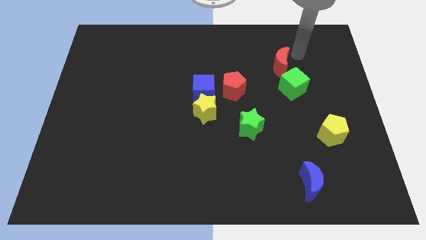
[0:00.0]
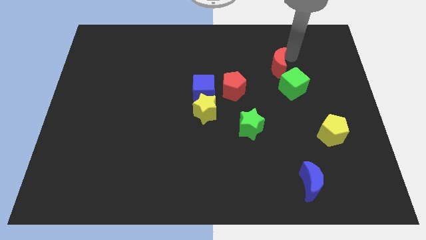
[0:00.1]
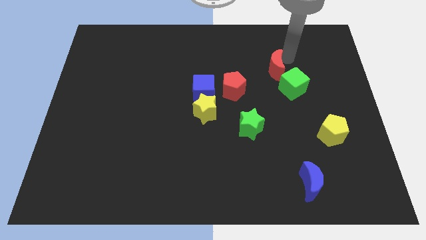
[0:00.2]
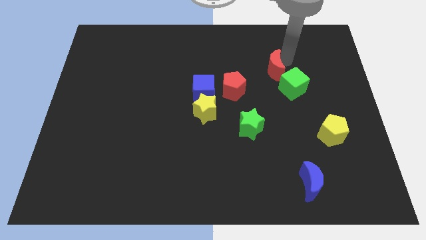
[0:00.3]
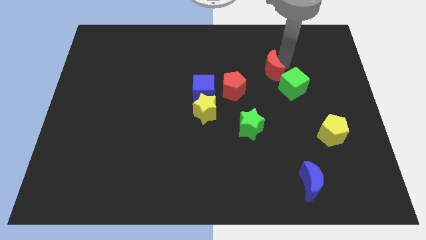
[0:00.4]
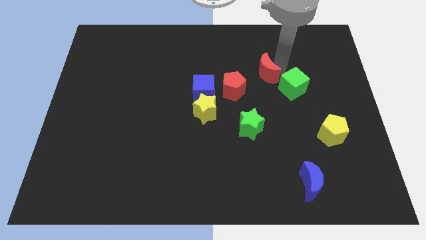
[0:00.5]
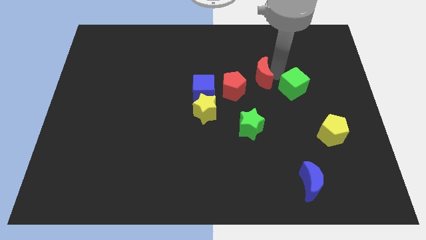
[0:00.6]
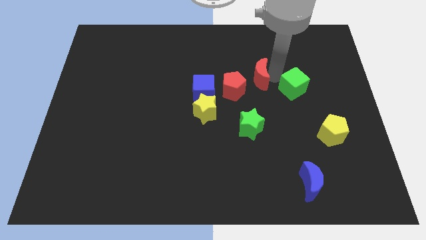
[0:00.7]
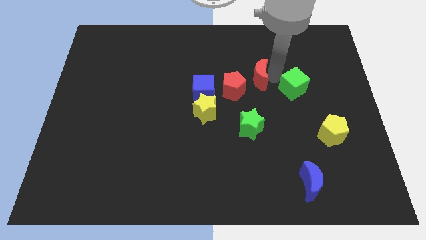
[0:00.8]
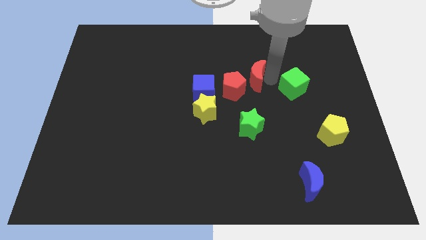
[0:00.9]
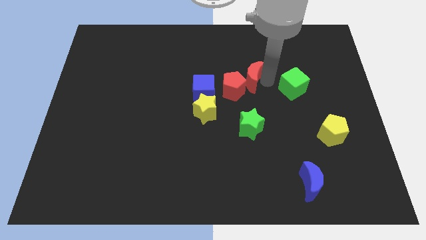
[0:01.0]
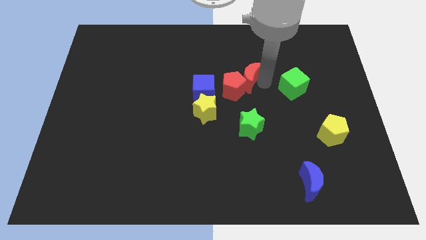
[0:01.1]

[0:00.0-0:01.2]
move the red crescent to the right of the red pentagon

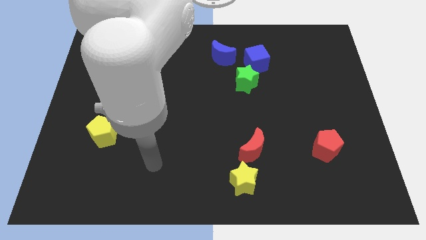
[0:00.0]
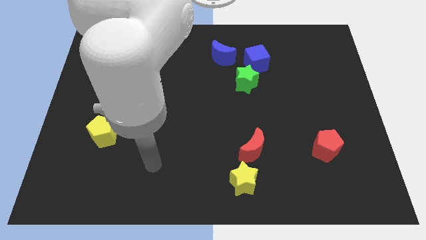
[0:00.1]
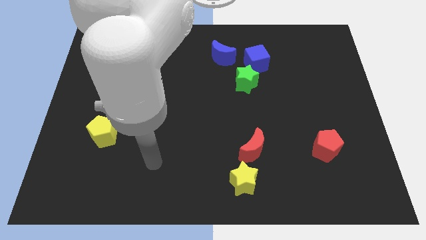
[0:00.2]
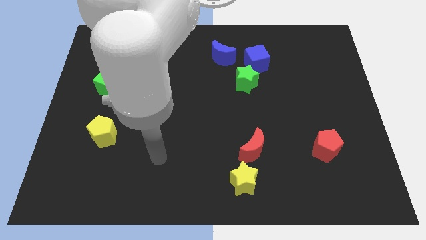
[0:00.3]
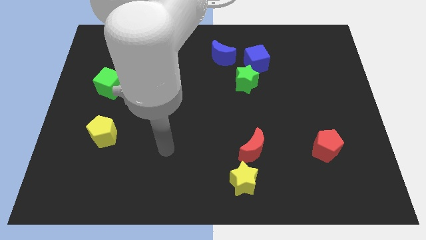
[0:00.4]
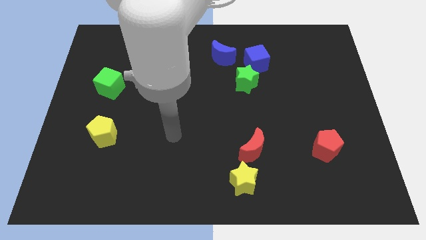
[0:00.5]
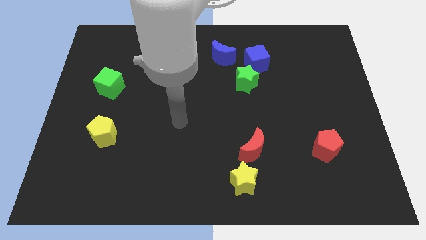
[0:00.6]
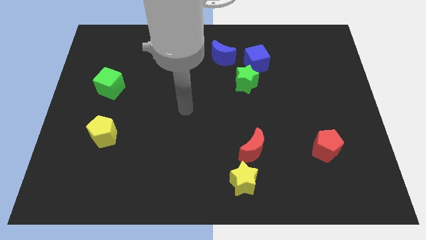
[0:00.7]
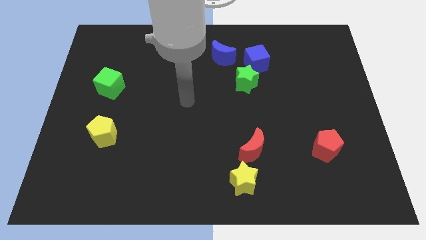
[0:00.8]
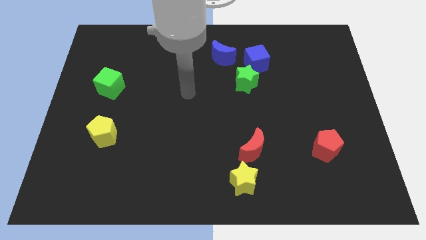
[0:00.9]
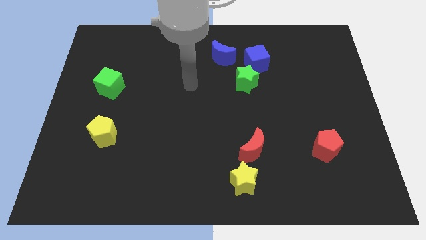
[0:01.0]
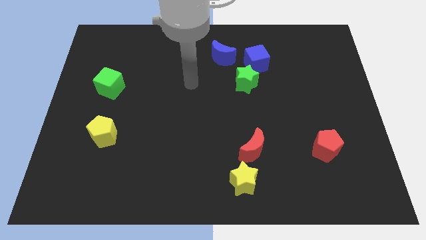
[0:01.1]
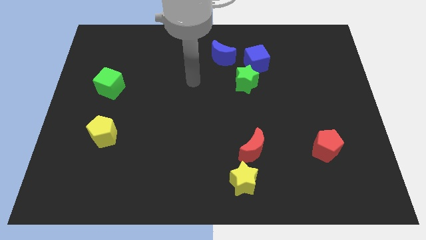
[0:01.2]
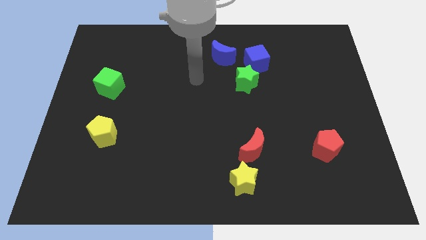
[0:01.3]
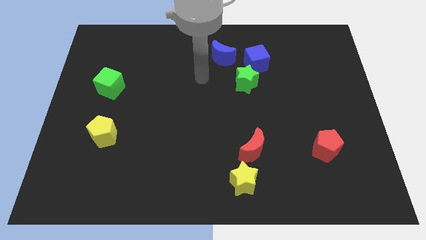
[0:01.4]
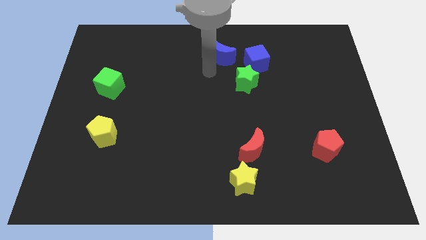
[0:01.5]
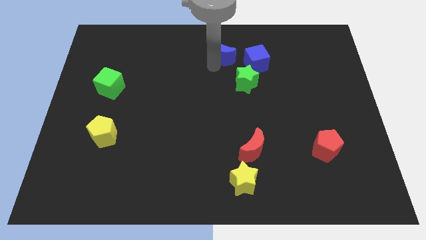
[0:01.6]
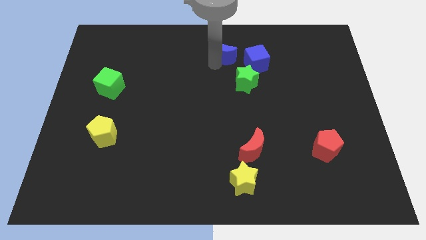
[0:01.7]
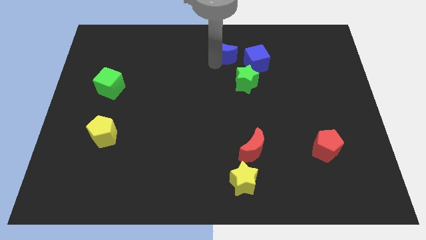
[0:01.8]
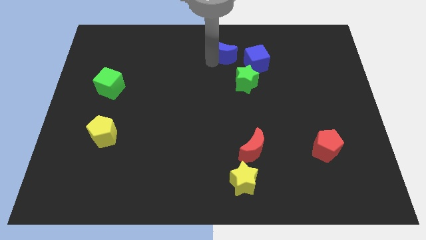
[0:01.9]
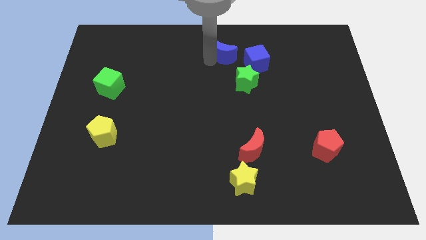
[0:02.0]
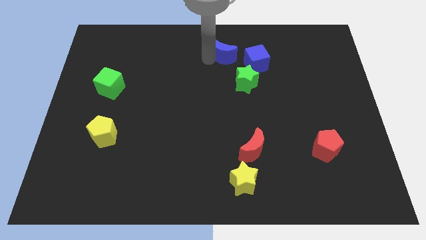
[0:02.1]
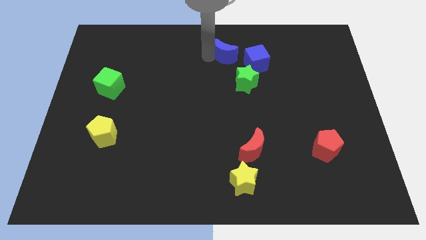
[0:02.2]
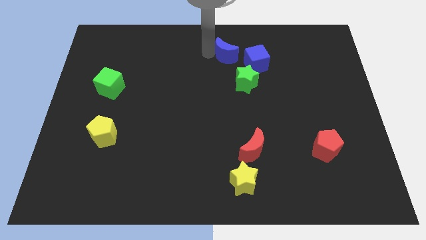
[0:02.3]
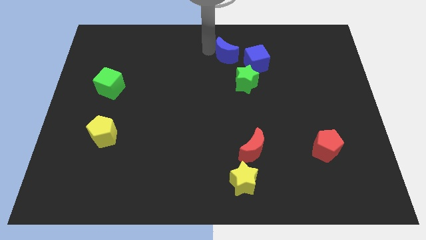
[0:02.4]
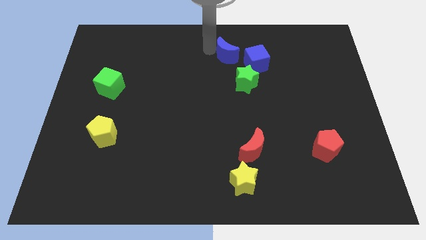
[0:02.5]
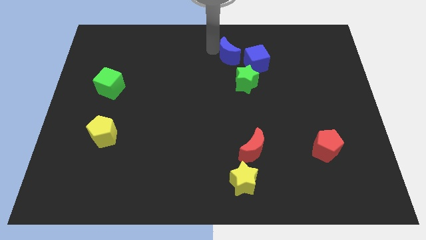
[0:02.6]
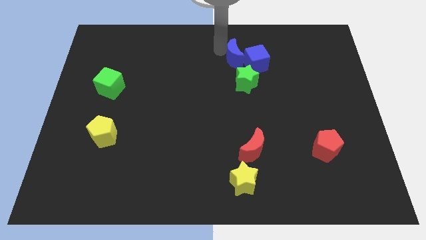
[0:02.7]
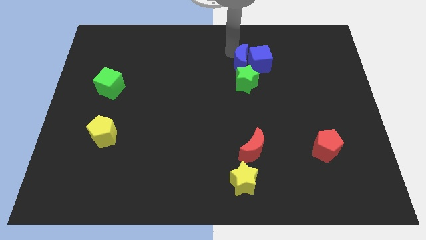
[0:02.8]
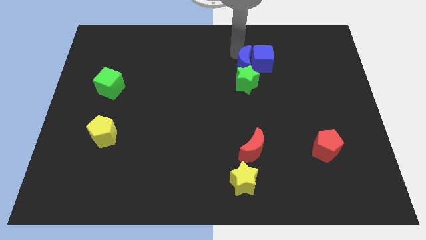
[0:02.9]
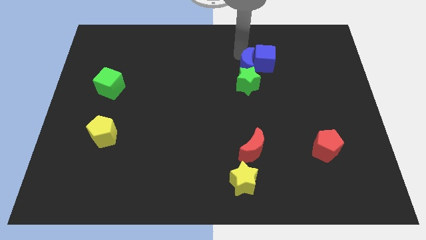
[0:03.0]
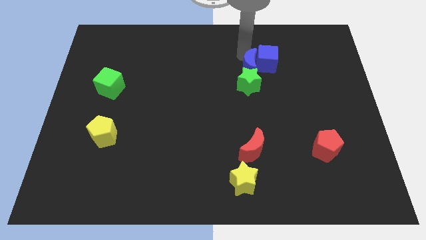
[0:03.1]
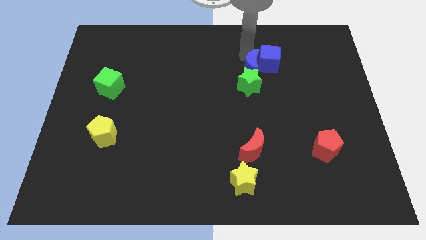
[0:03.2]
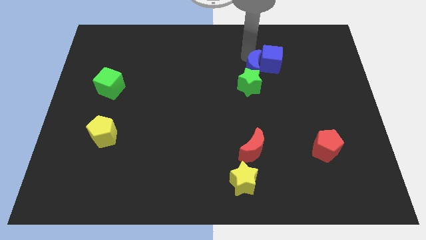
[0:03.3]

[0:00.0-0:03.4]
move your arm close to the blue moon

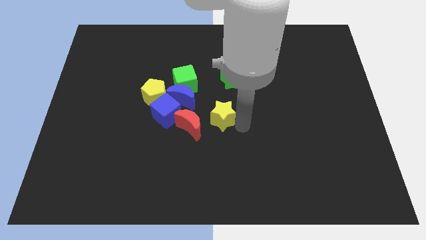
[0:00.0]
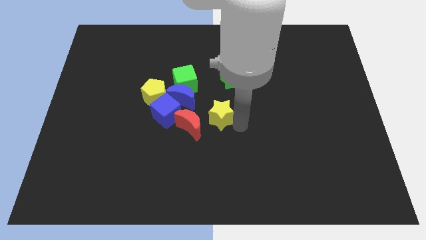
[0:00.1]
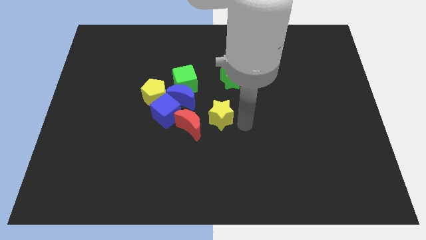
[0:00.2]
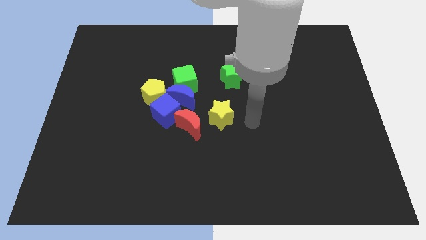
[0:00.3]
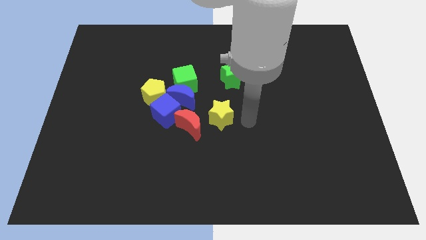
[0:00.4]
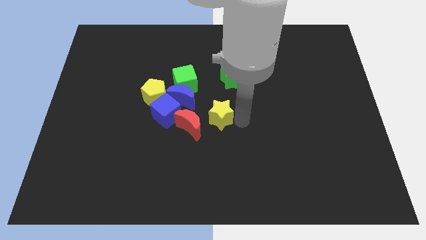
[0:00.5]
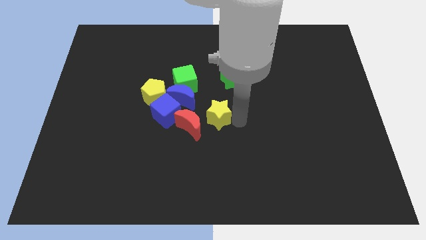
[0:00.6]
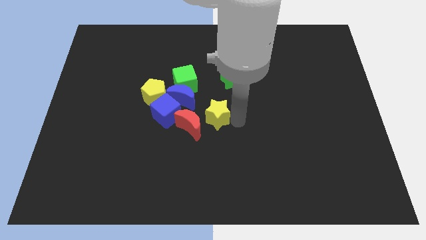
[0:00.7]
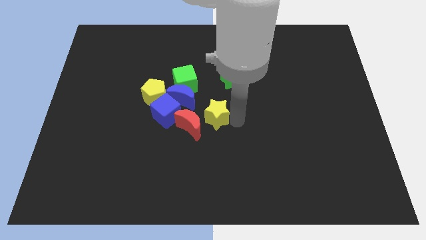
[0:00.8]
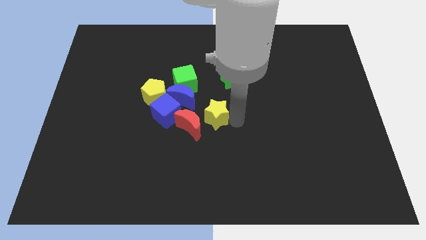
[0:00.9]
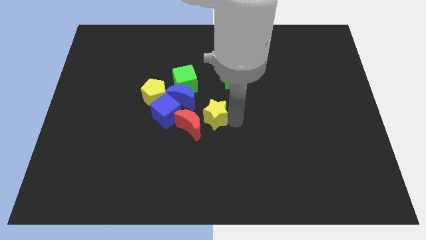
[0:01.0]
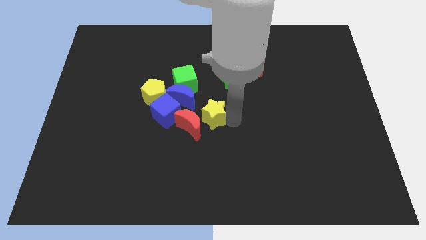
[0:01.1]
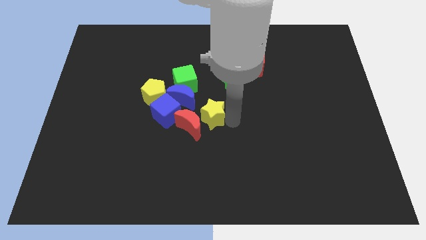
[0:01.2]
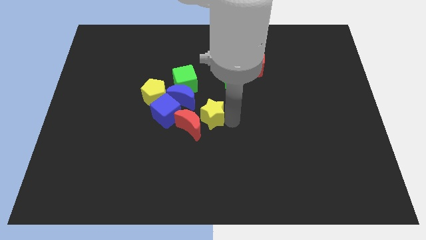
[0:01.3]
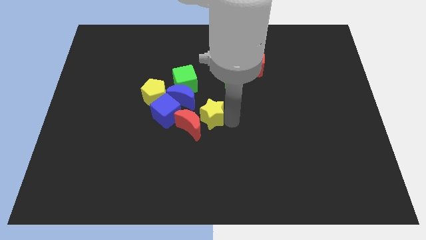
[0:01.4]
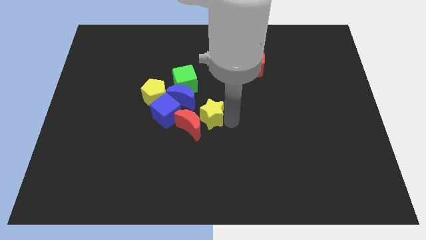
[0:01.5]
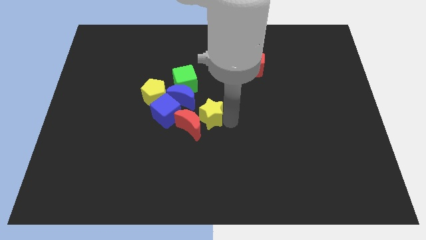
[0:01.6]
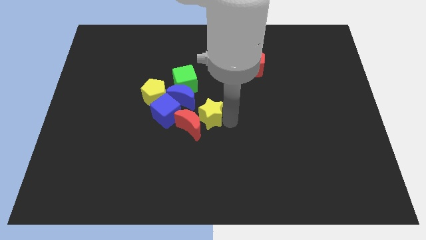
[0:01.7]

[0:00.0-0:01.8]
move the yellow star to the right side of the red moon

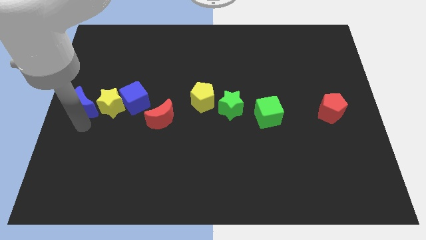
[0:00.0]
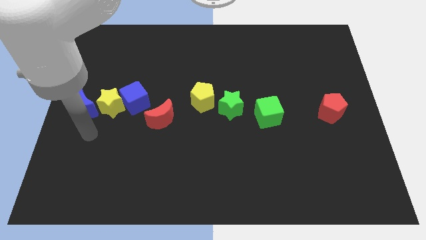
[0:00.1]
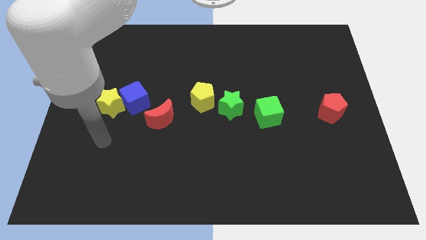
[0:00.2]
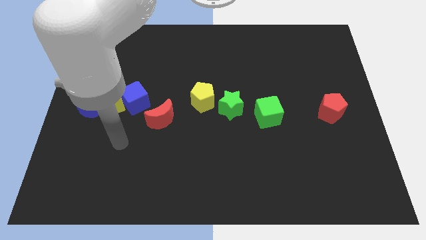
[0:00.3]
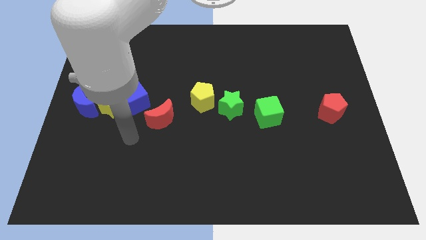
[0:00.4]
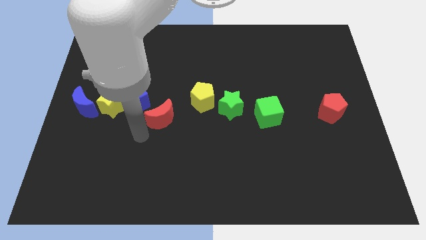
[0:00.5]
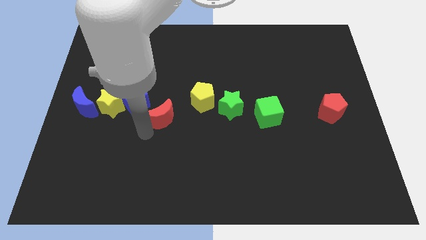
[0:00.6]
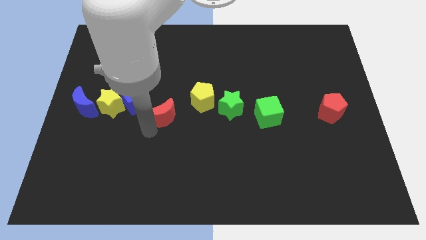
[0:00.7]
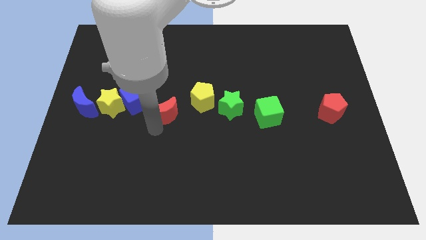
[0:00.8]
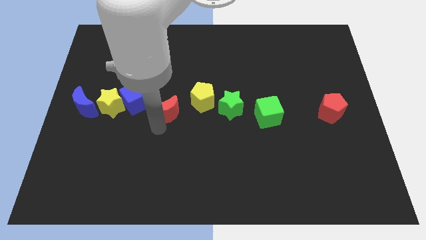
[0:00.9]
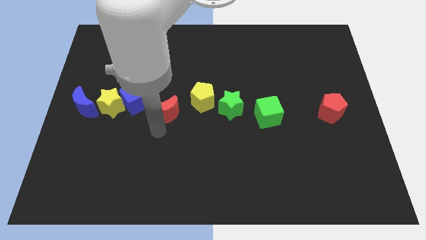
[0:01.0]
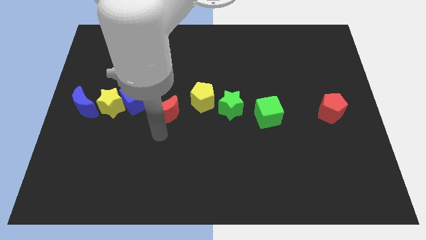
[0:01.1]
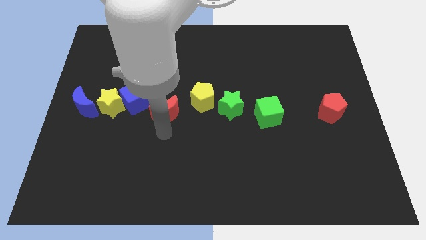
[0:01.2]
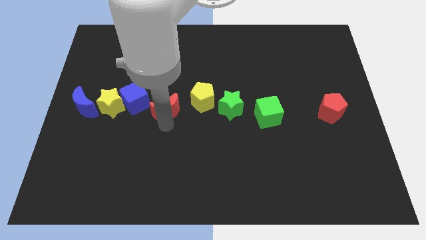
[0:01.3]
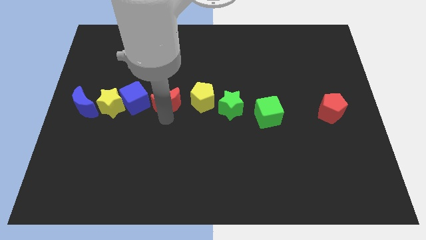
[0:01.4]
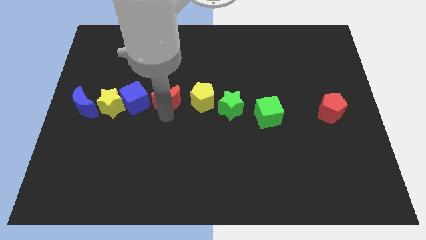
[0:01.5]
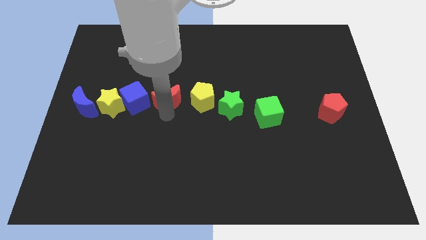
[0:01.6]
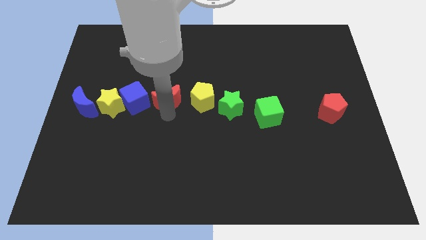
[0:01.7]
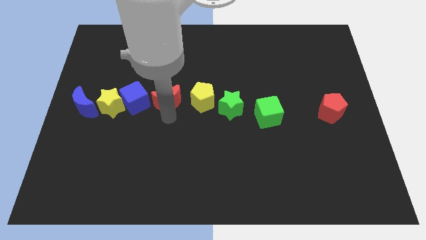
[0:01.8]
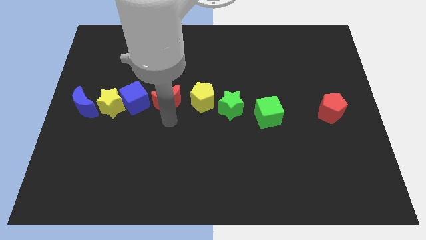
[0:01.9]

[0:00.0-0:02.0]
put the red moon right to the blue cube

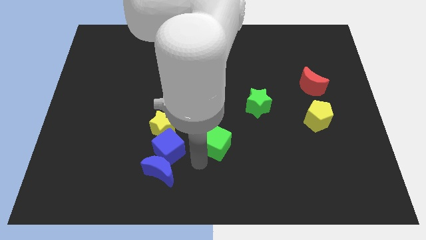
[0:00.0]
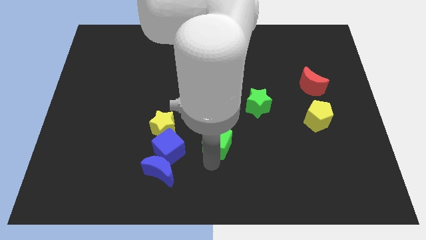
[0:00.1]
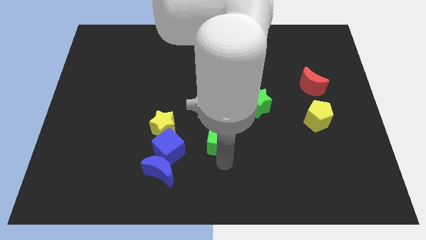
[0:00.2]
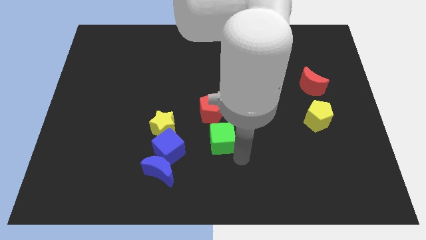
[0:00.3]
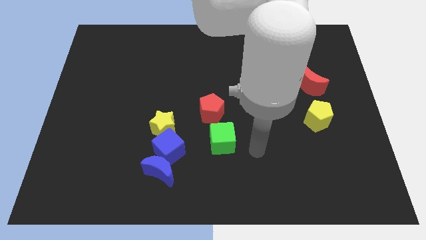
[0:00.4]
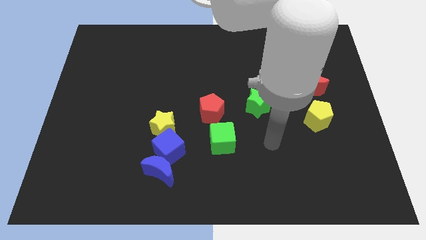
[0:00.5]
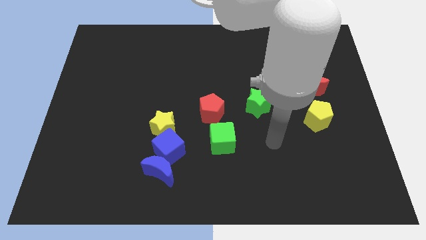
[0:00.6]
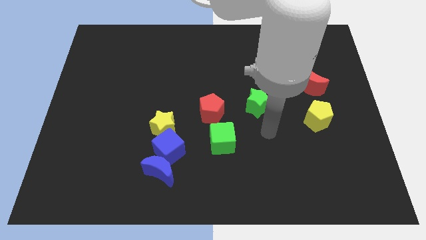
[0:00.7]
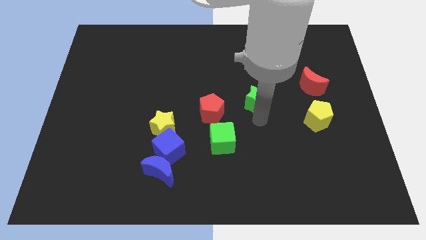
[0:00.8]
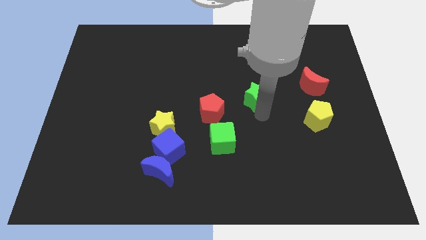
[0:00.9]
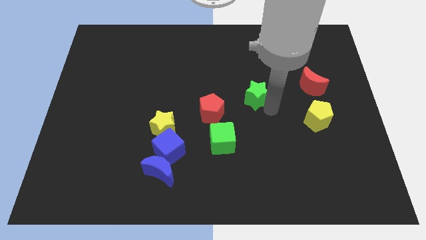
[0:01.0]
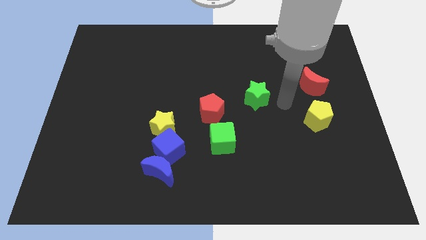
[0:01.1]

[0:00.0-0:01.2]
touch the green cube and green star
